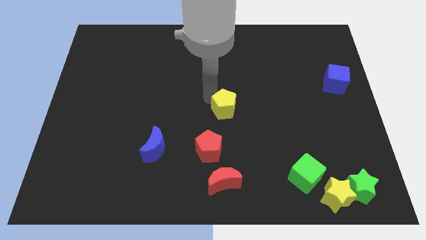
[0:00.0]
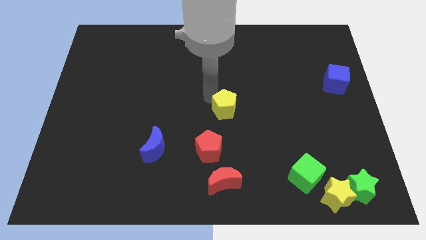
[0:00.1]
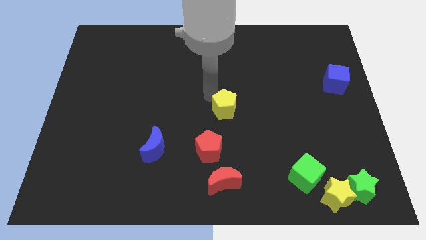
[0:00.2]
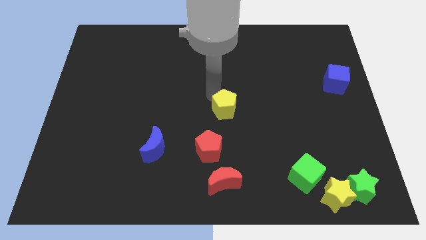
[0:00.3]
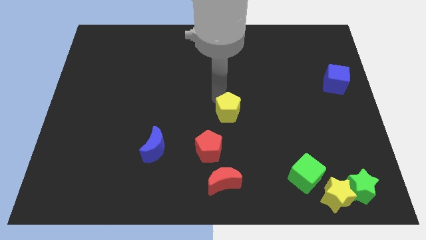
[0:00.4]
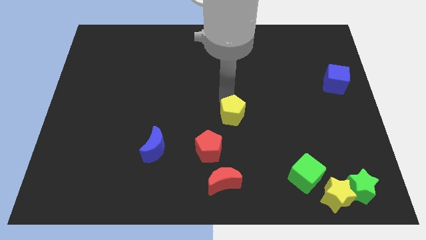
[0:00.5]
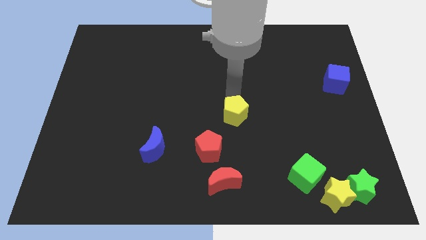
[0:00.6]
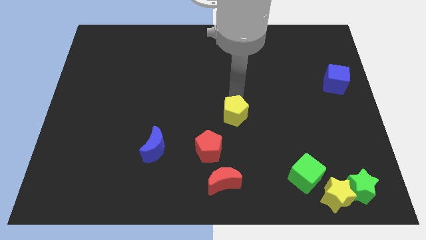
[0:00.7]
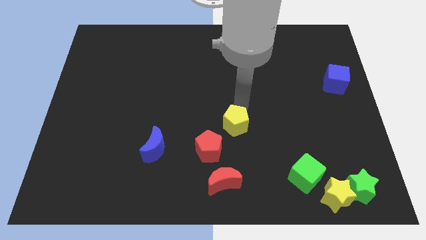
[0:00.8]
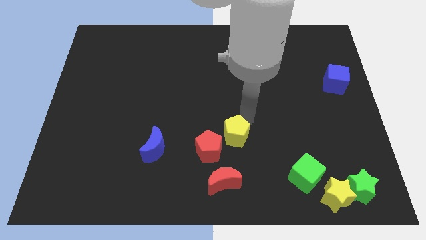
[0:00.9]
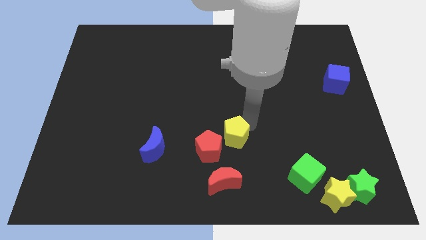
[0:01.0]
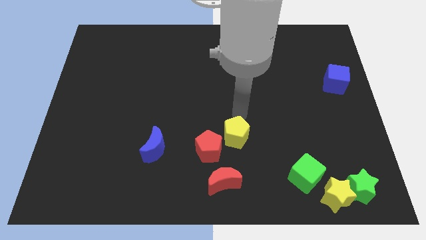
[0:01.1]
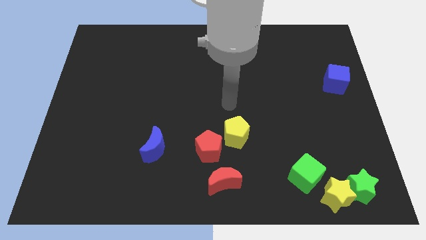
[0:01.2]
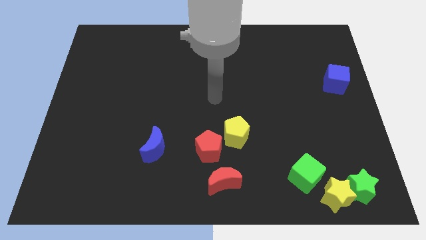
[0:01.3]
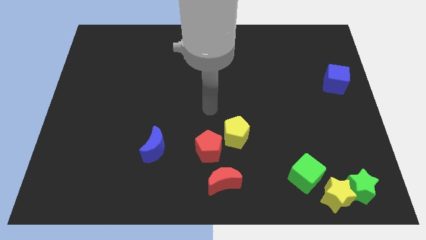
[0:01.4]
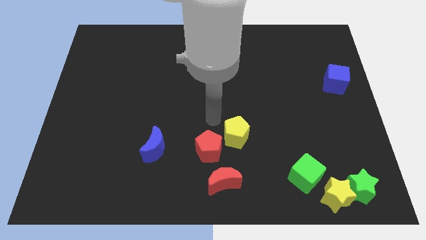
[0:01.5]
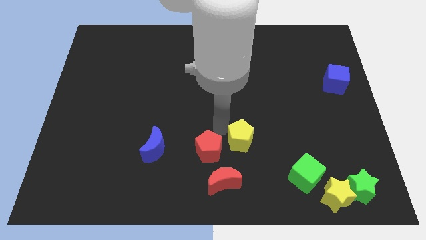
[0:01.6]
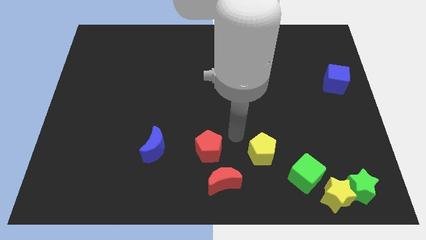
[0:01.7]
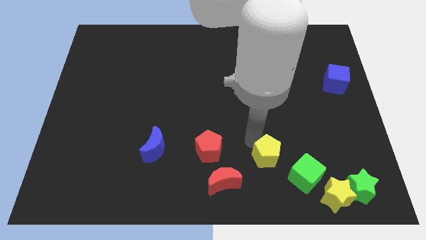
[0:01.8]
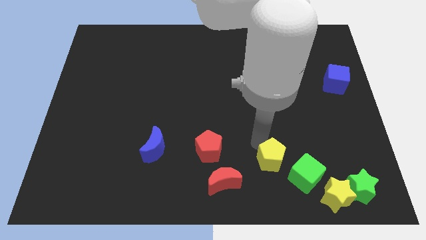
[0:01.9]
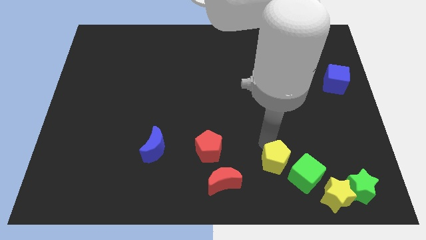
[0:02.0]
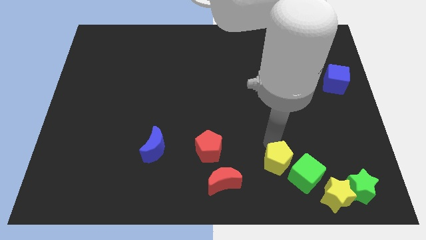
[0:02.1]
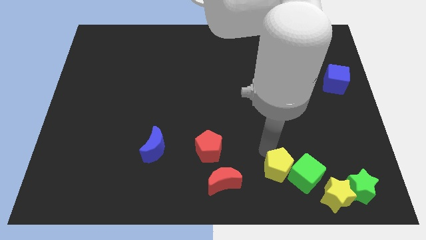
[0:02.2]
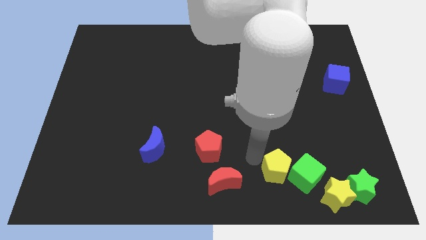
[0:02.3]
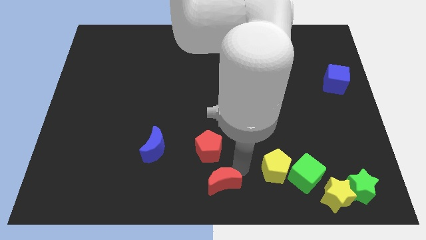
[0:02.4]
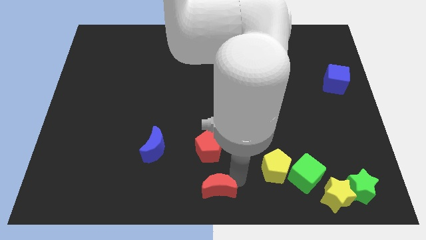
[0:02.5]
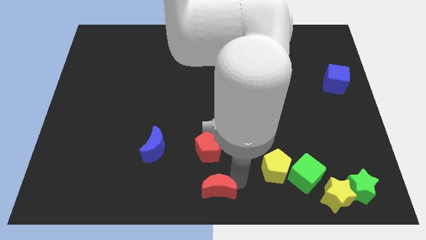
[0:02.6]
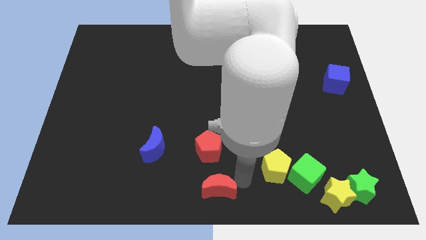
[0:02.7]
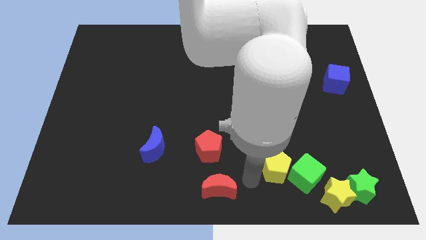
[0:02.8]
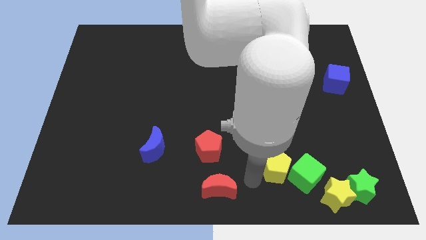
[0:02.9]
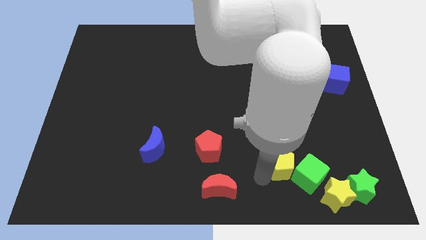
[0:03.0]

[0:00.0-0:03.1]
put the yellow pentagon to the left of the green cube

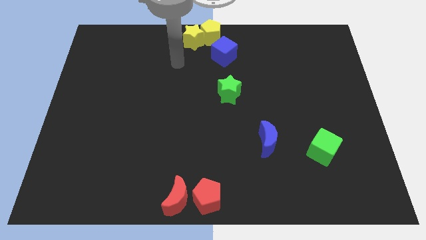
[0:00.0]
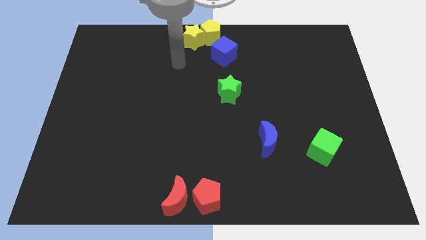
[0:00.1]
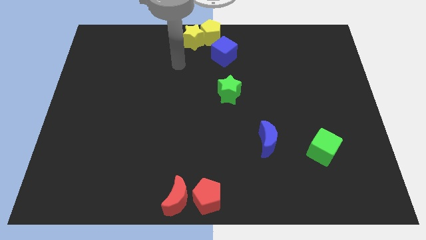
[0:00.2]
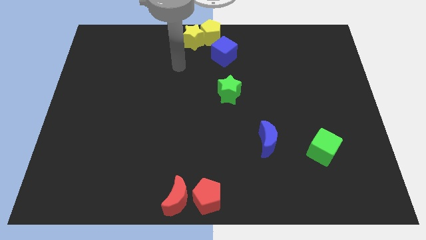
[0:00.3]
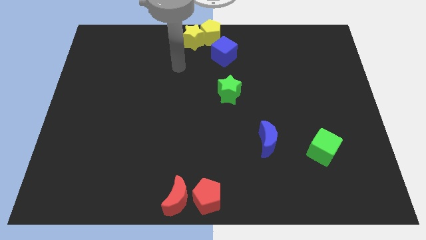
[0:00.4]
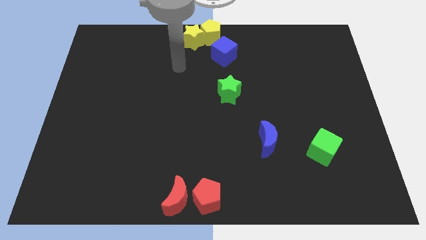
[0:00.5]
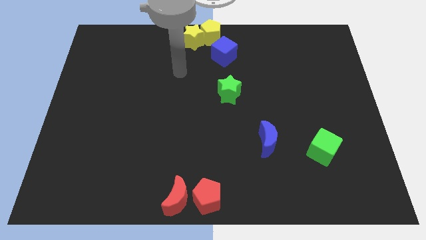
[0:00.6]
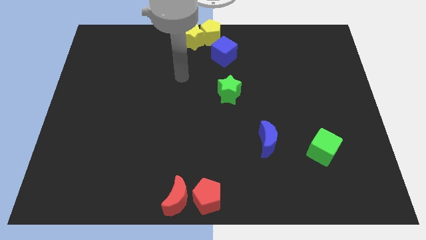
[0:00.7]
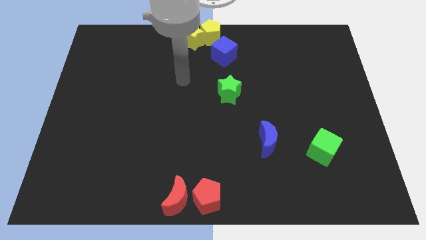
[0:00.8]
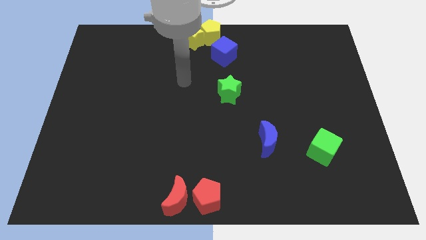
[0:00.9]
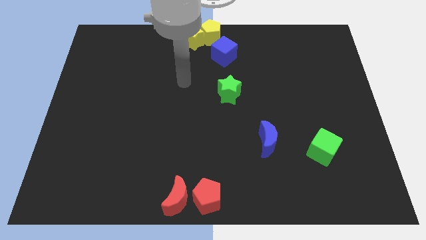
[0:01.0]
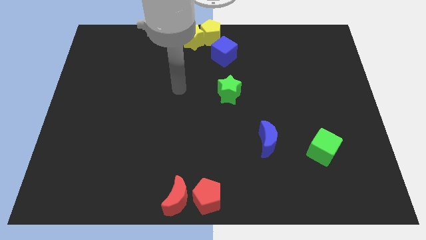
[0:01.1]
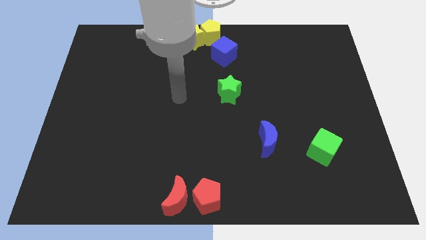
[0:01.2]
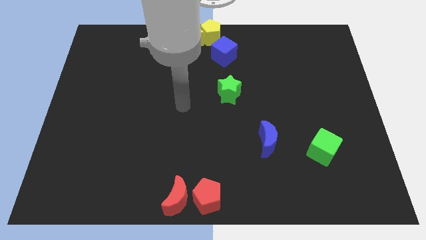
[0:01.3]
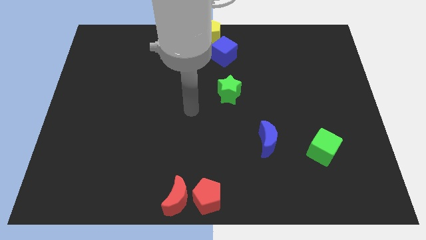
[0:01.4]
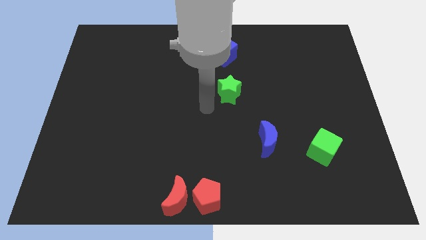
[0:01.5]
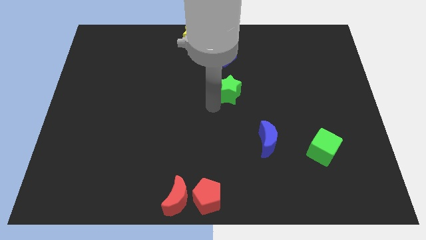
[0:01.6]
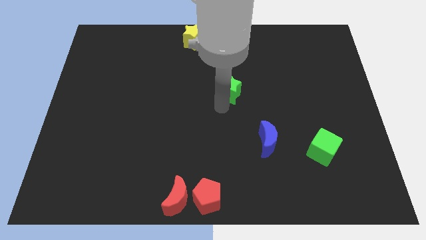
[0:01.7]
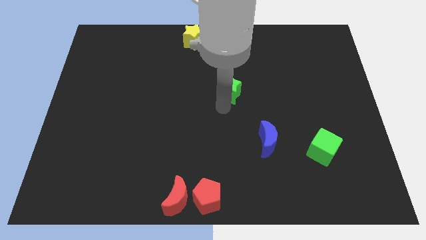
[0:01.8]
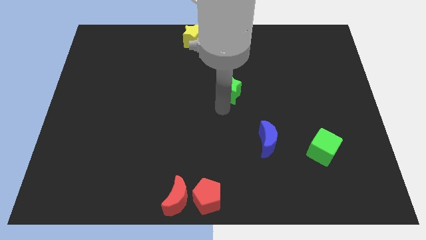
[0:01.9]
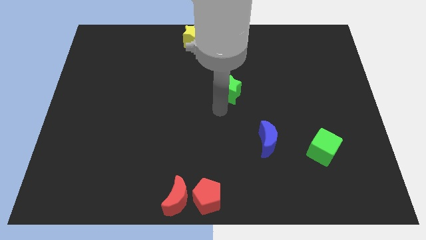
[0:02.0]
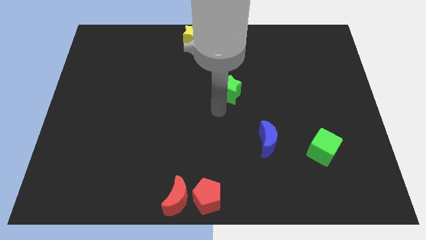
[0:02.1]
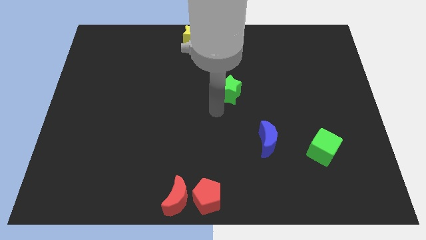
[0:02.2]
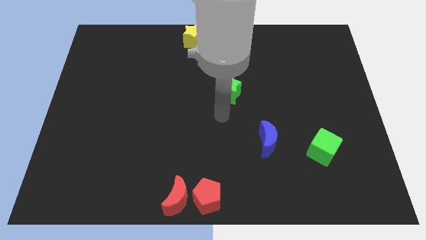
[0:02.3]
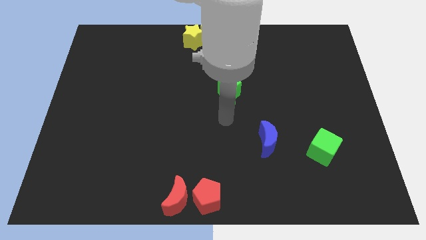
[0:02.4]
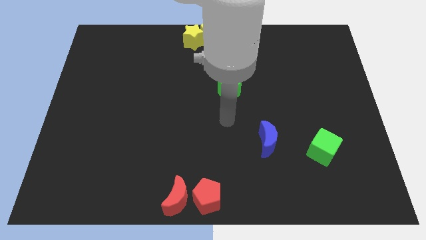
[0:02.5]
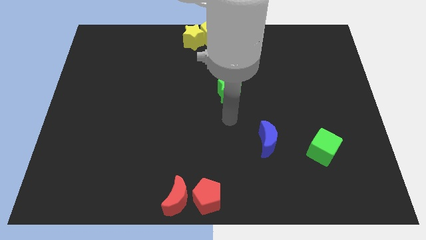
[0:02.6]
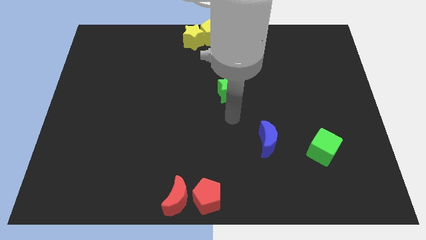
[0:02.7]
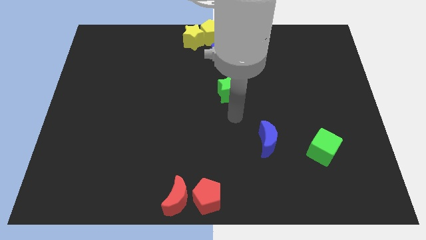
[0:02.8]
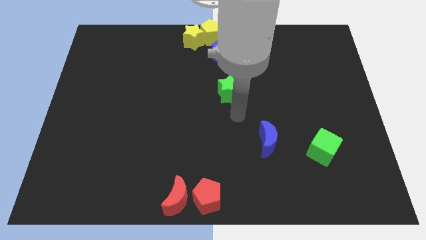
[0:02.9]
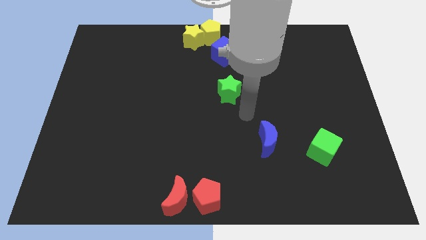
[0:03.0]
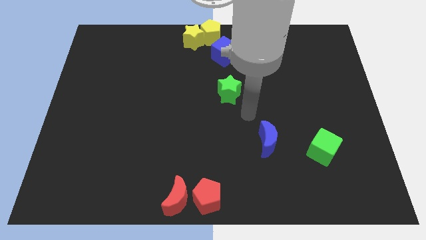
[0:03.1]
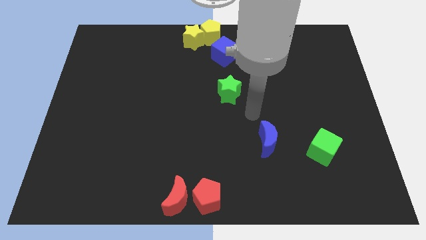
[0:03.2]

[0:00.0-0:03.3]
move your arm to the top of blue crescent

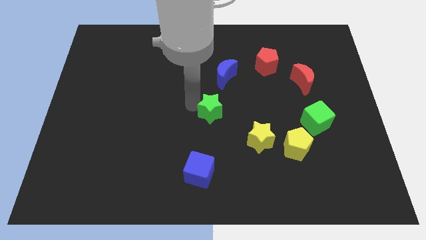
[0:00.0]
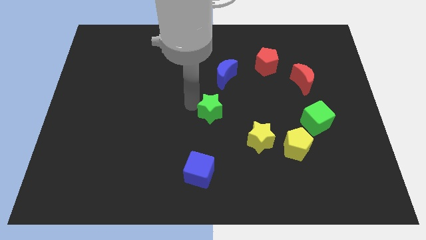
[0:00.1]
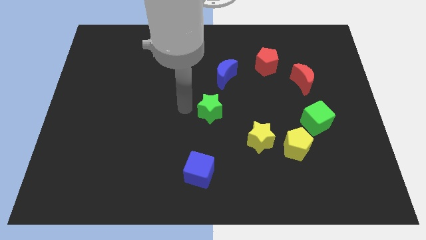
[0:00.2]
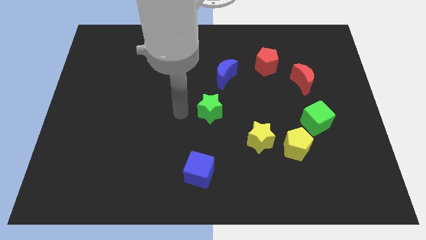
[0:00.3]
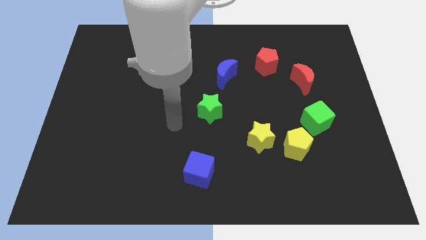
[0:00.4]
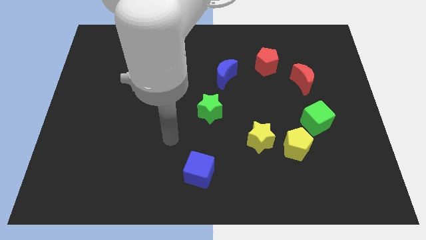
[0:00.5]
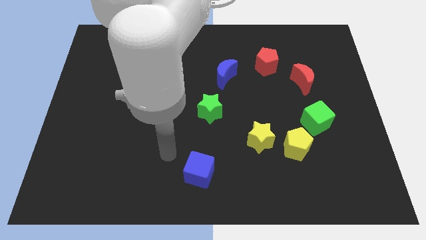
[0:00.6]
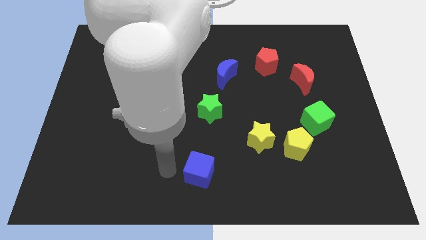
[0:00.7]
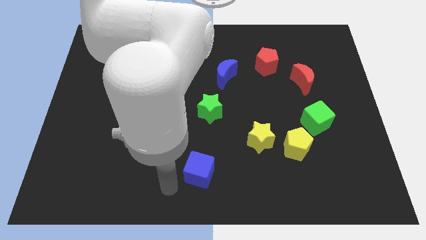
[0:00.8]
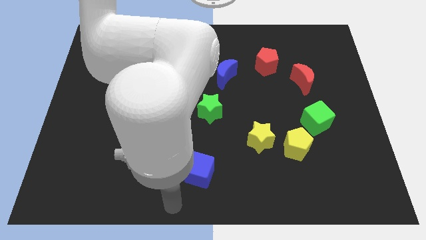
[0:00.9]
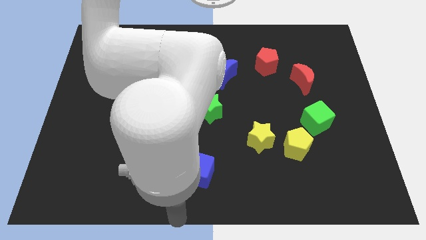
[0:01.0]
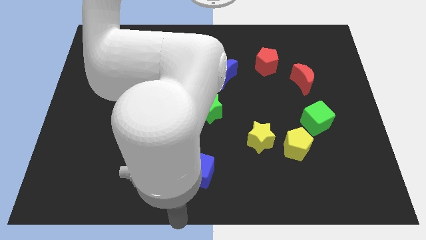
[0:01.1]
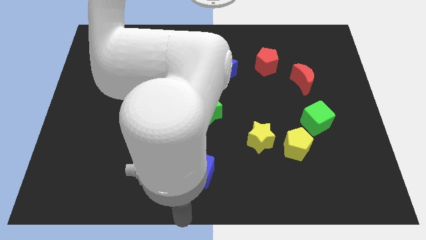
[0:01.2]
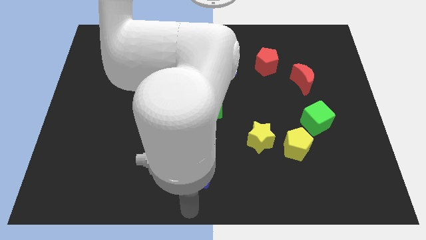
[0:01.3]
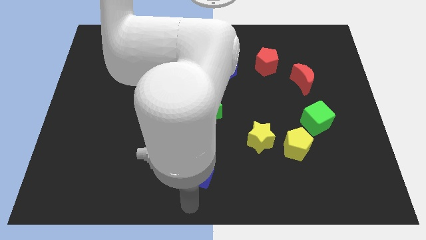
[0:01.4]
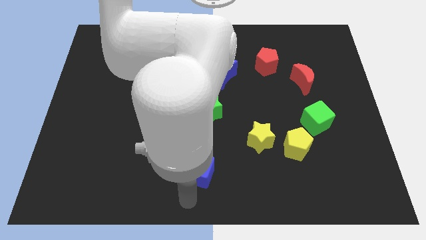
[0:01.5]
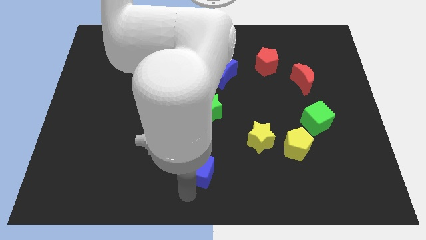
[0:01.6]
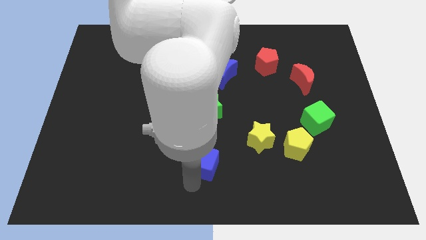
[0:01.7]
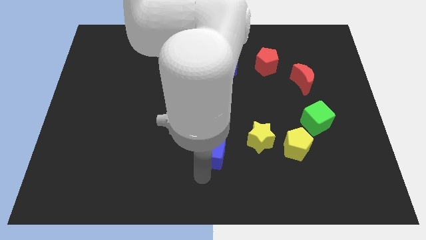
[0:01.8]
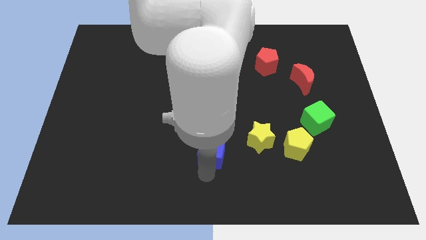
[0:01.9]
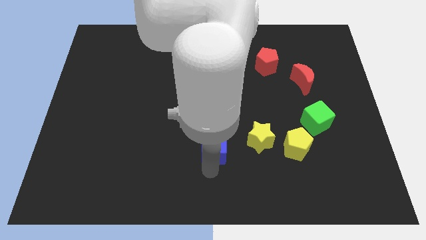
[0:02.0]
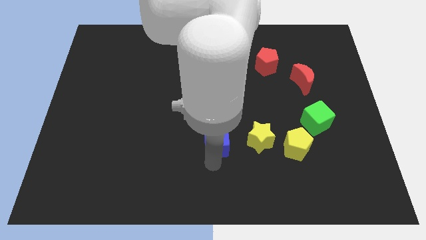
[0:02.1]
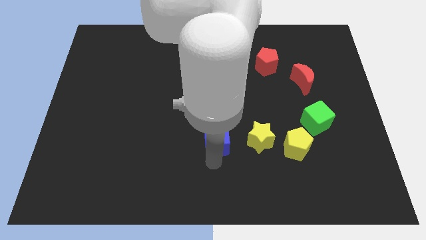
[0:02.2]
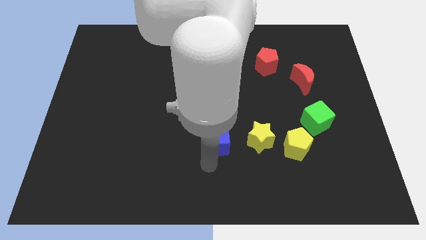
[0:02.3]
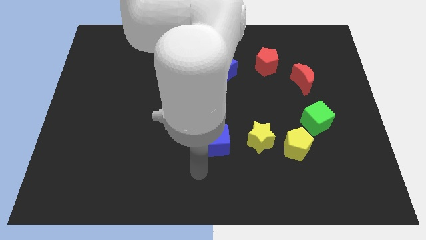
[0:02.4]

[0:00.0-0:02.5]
place green star to the left of the yellow star
